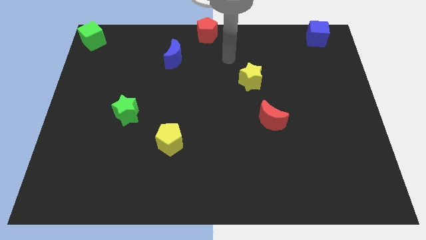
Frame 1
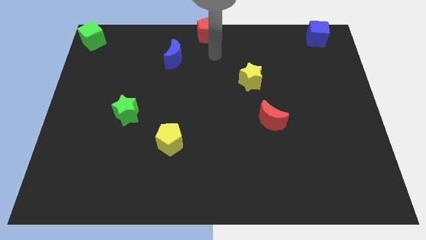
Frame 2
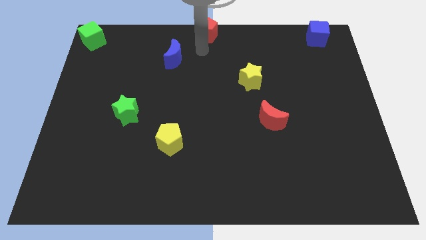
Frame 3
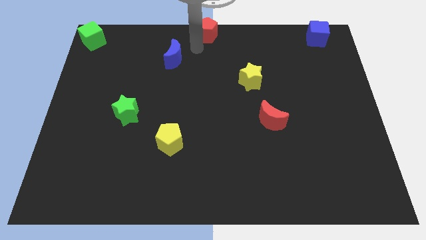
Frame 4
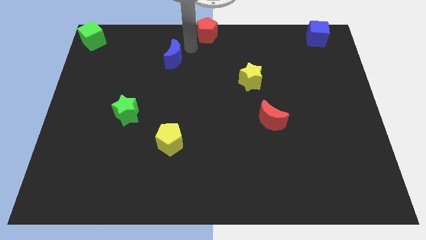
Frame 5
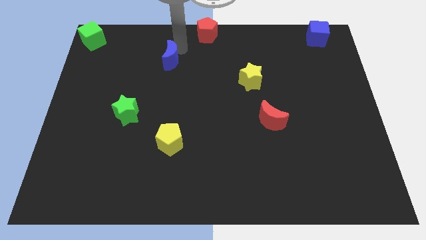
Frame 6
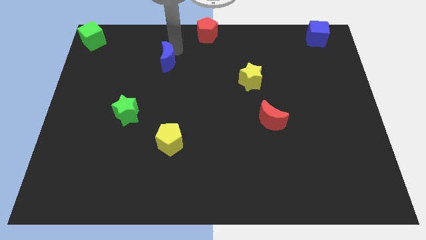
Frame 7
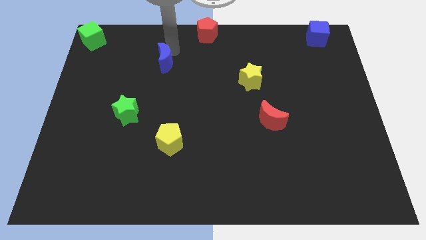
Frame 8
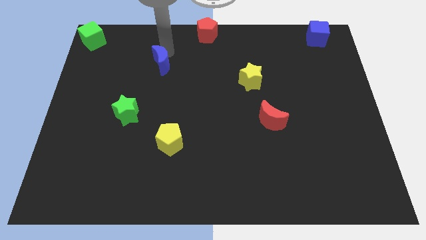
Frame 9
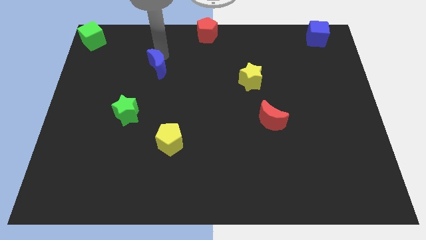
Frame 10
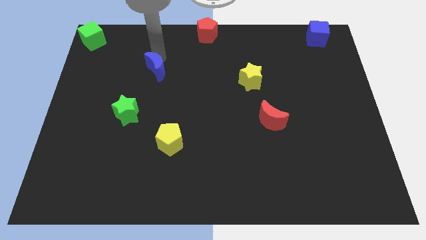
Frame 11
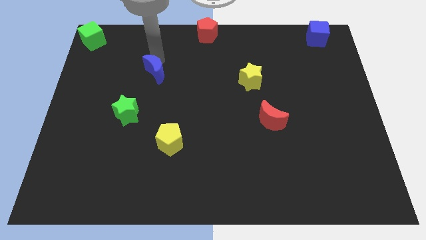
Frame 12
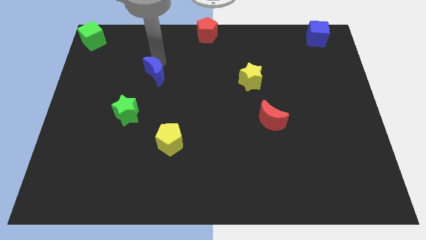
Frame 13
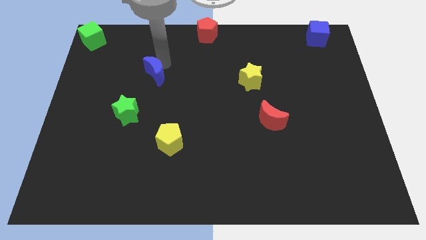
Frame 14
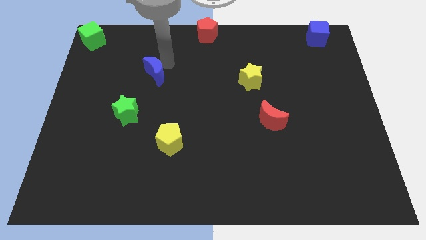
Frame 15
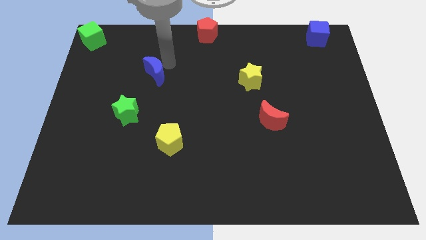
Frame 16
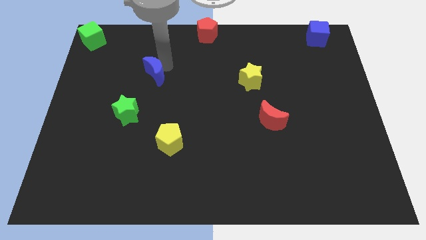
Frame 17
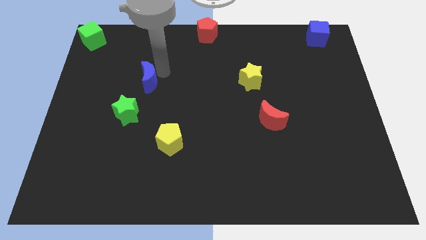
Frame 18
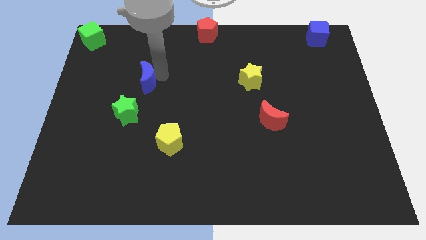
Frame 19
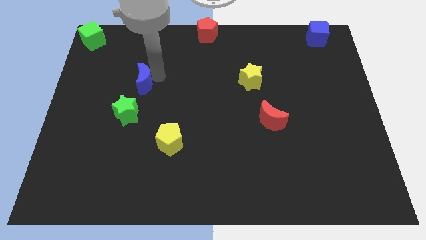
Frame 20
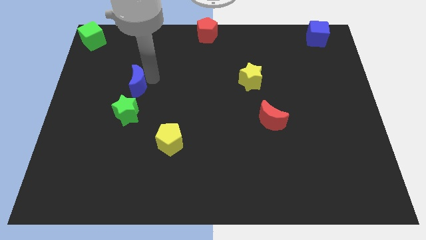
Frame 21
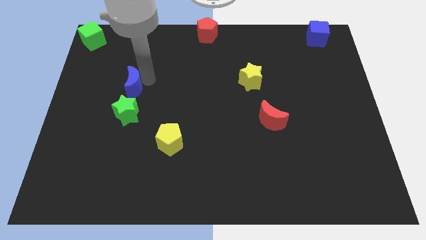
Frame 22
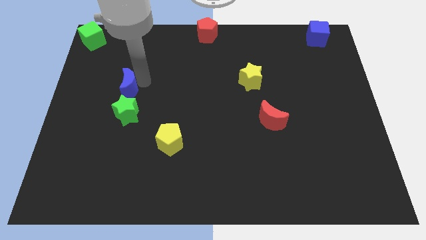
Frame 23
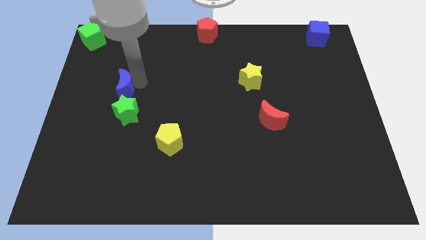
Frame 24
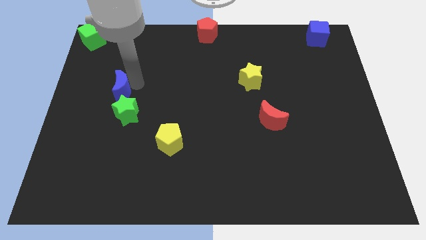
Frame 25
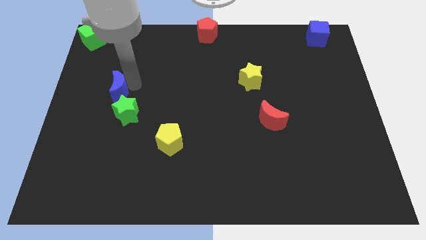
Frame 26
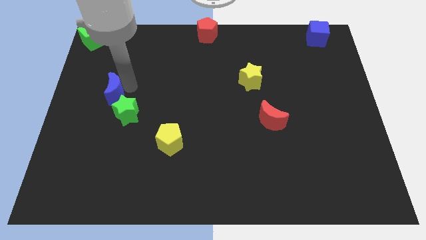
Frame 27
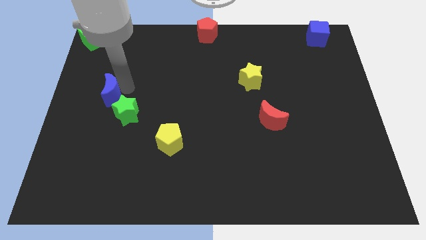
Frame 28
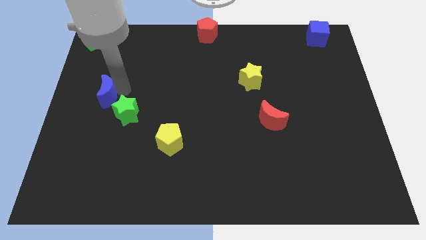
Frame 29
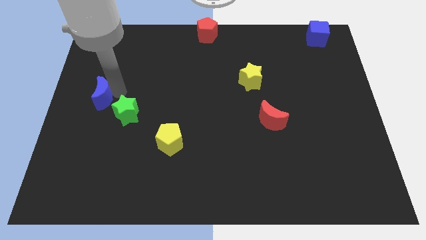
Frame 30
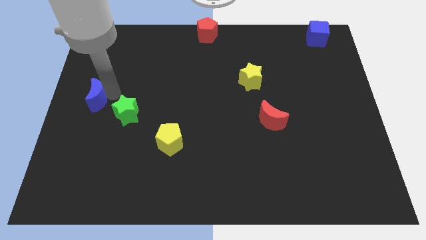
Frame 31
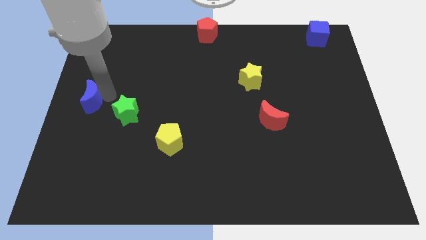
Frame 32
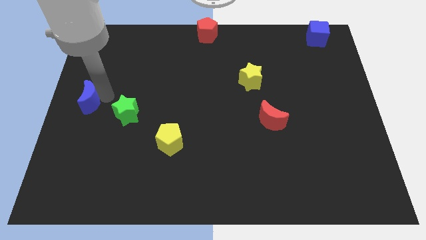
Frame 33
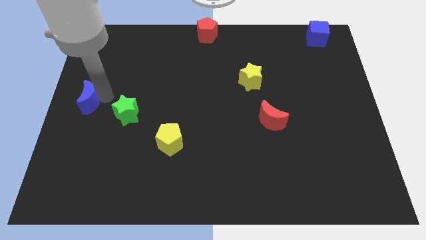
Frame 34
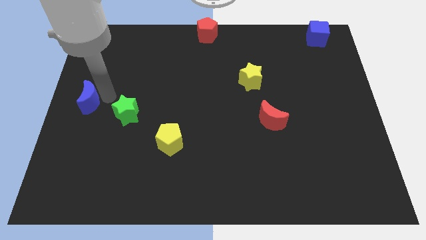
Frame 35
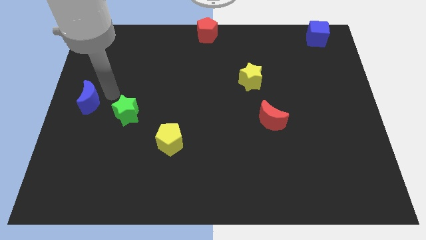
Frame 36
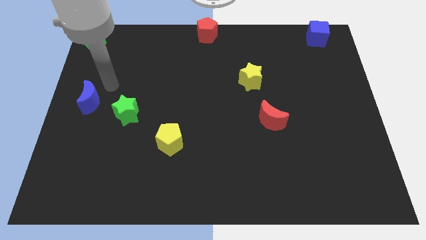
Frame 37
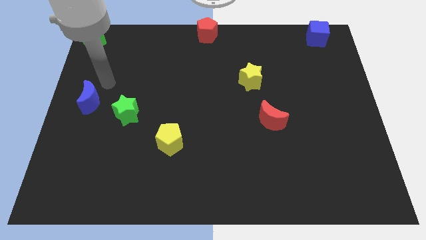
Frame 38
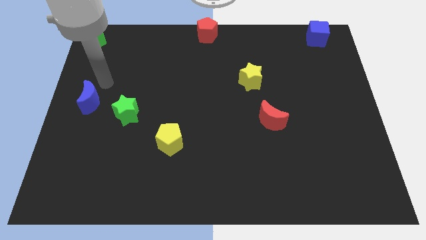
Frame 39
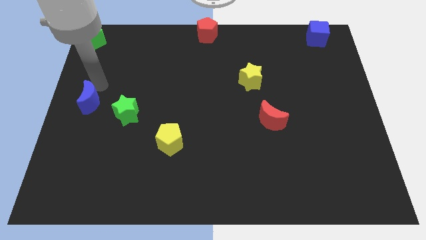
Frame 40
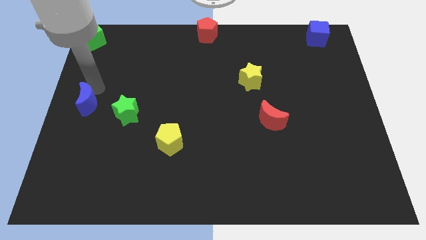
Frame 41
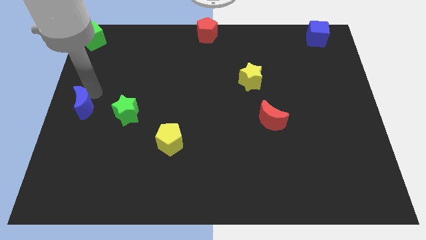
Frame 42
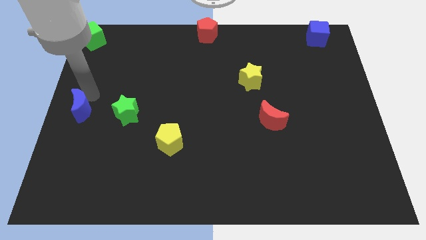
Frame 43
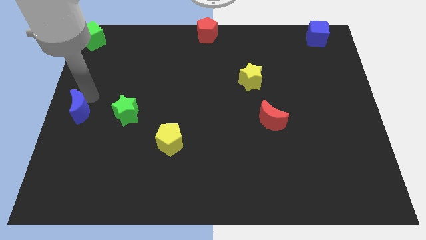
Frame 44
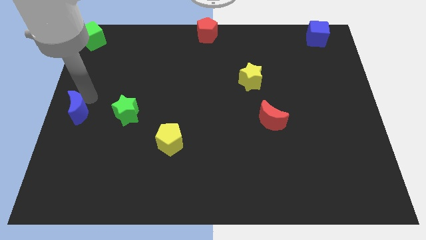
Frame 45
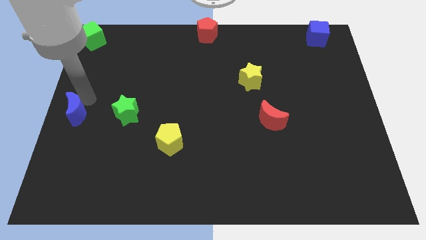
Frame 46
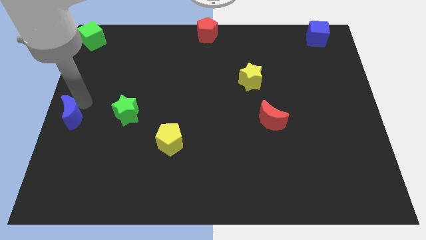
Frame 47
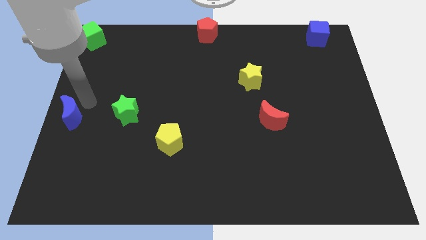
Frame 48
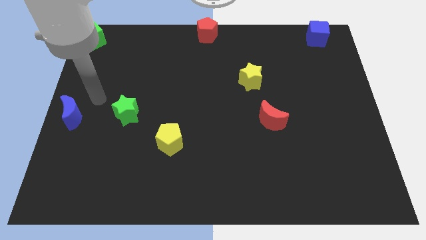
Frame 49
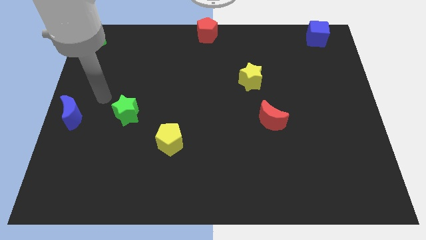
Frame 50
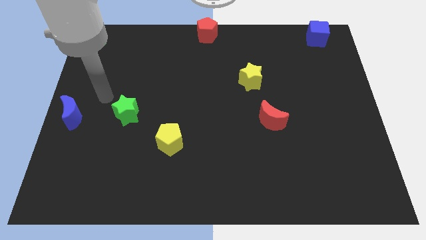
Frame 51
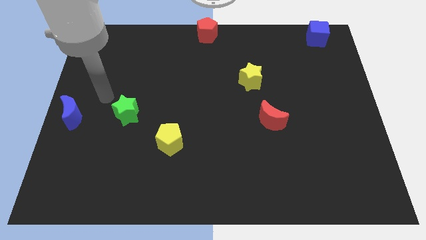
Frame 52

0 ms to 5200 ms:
move the blue crescent to the left center of the board

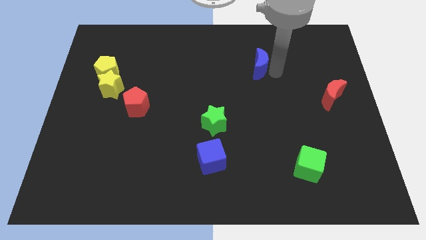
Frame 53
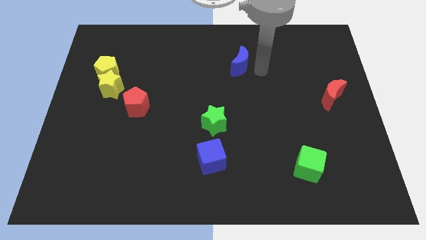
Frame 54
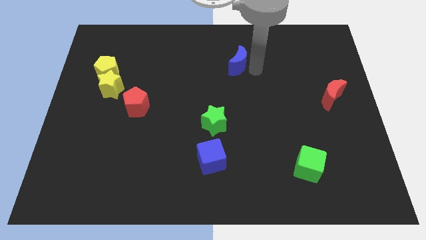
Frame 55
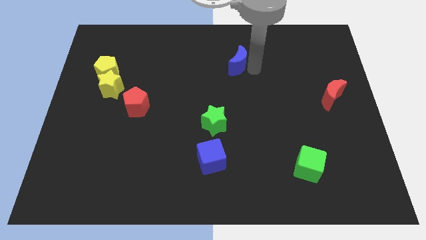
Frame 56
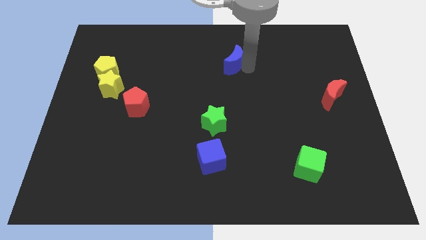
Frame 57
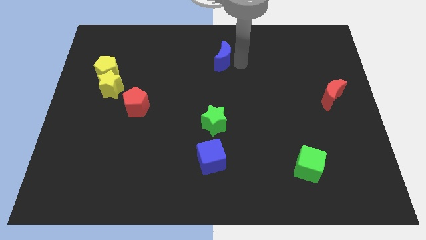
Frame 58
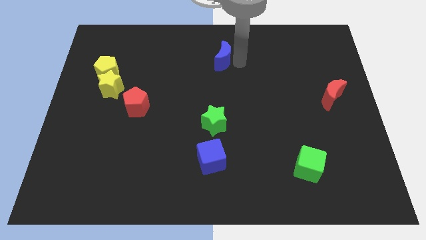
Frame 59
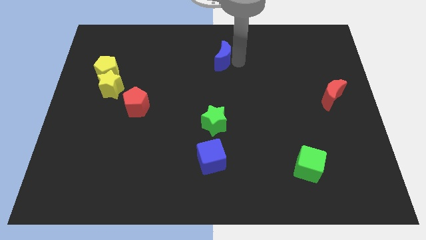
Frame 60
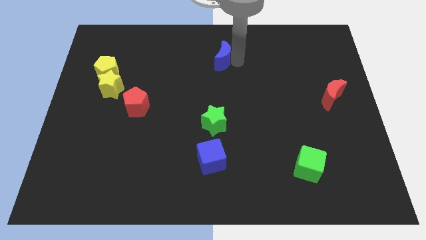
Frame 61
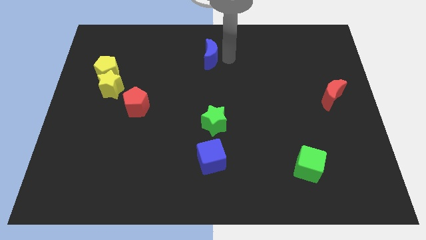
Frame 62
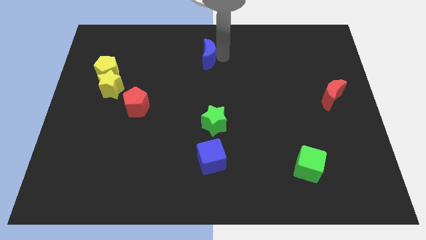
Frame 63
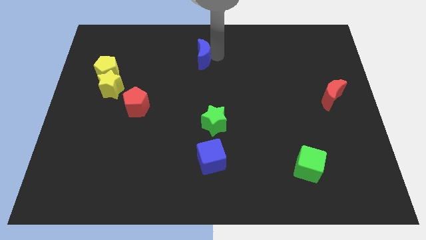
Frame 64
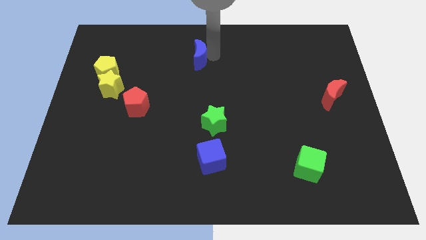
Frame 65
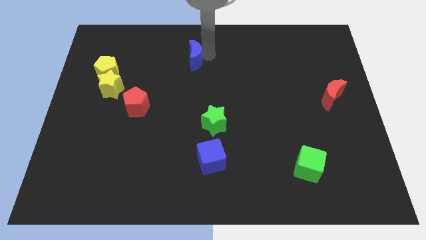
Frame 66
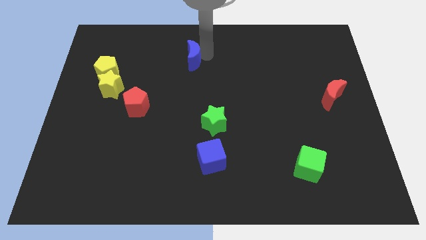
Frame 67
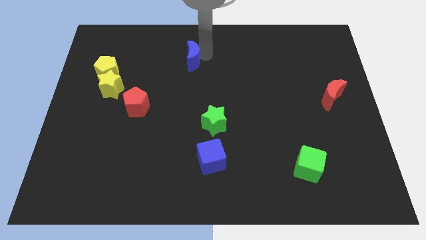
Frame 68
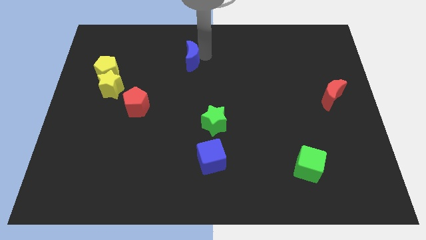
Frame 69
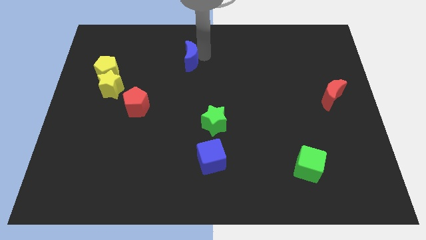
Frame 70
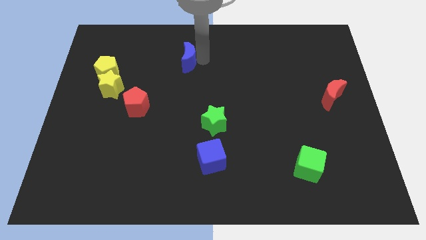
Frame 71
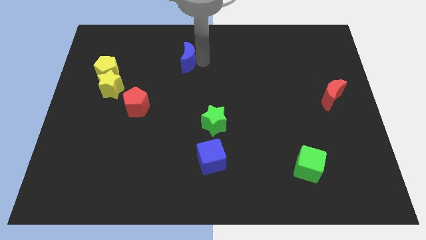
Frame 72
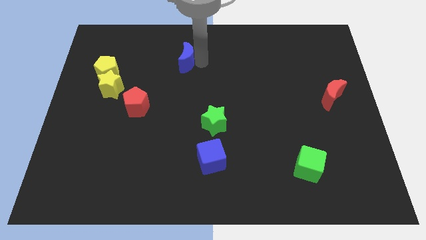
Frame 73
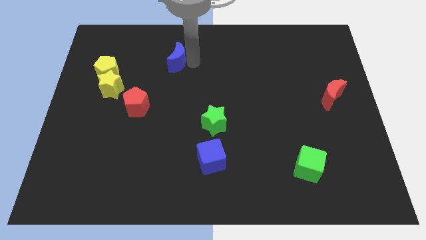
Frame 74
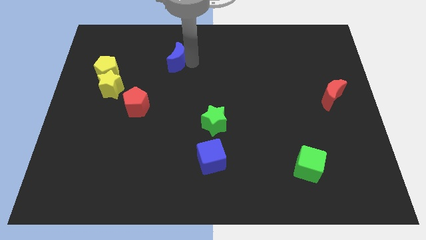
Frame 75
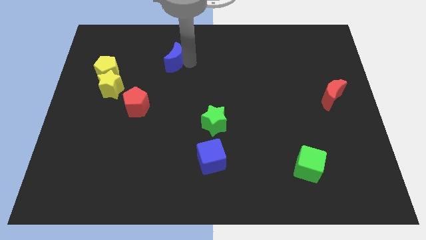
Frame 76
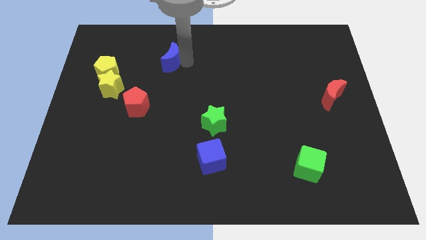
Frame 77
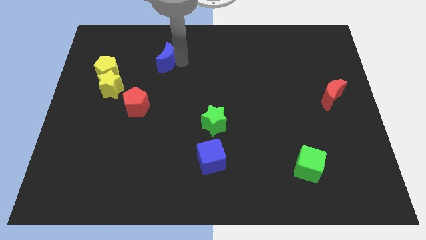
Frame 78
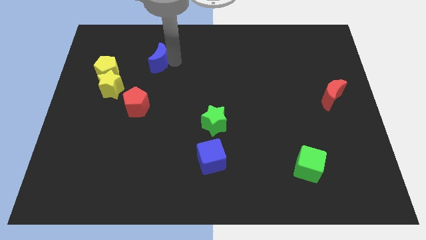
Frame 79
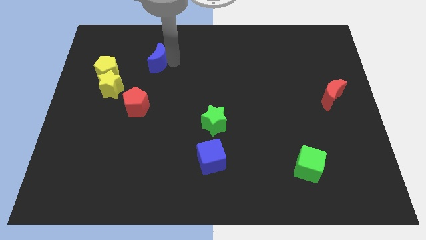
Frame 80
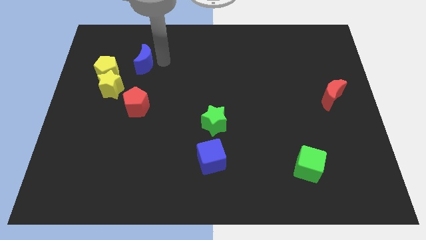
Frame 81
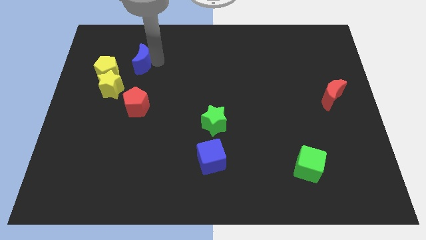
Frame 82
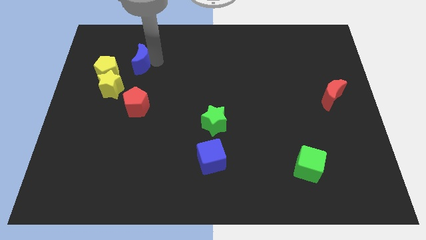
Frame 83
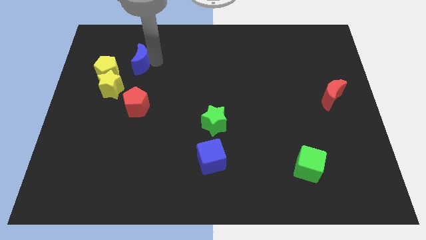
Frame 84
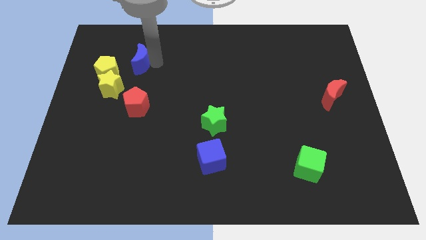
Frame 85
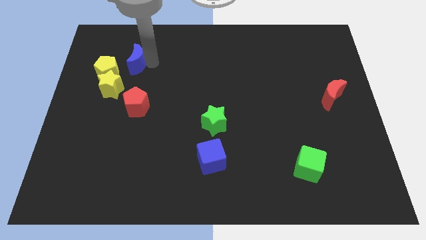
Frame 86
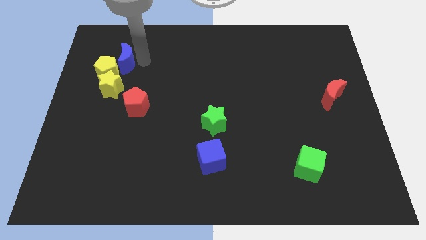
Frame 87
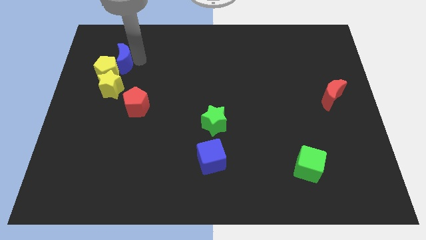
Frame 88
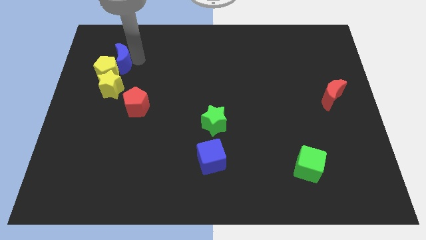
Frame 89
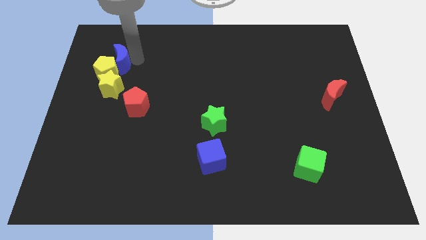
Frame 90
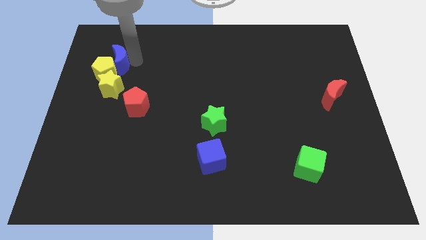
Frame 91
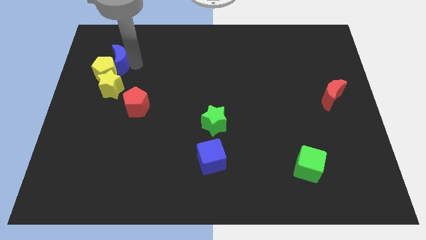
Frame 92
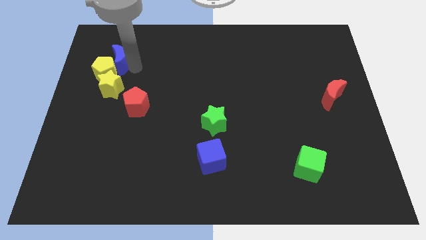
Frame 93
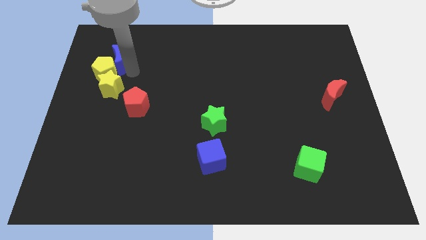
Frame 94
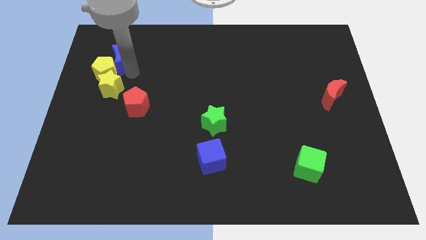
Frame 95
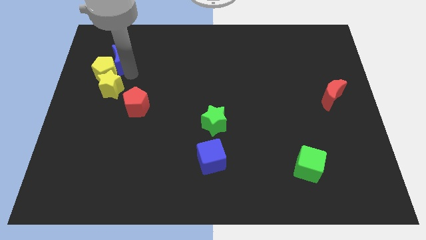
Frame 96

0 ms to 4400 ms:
move the blue moon into the yellow pentagon
